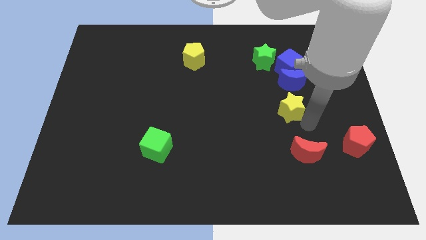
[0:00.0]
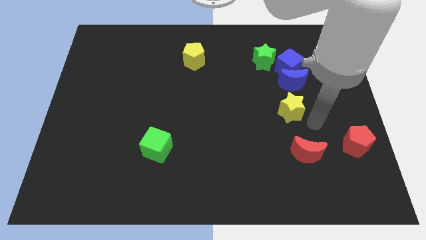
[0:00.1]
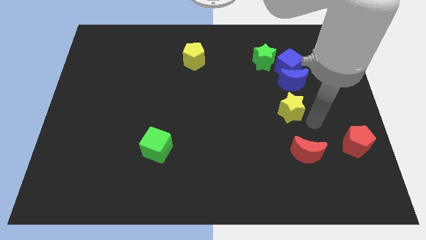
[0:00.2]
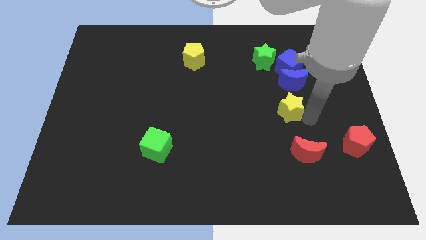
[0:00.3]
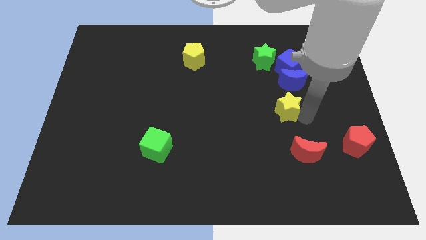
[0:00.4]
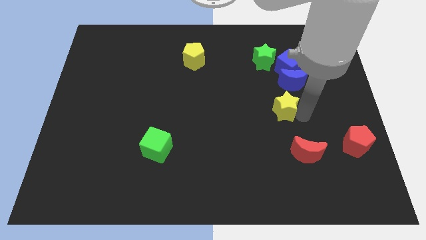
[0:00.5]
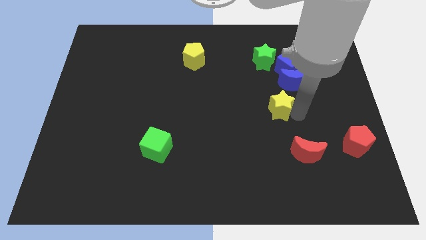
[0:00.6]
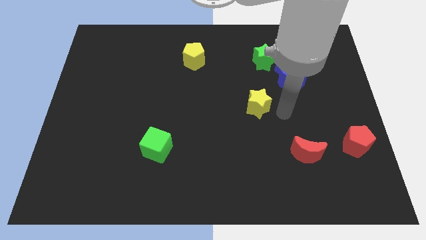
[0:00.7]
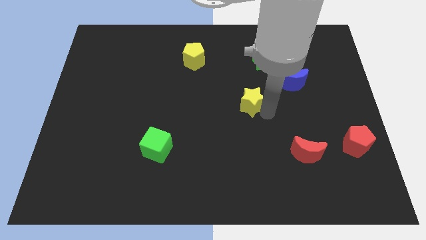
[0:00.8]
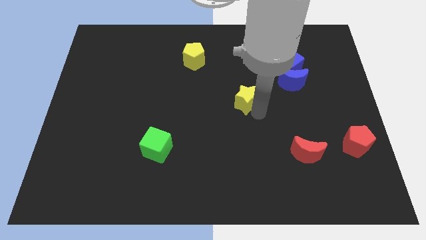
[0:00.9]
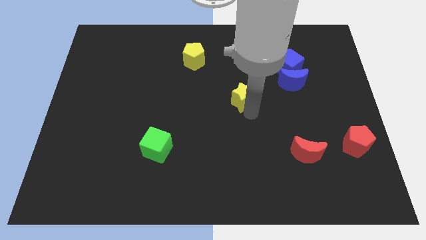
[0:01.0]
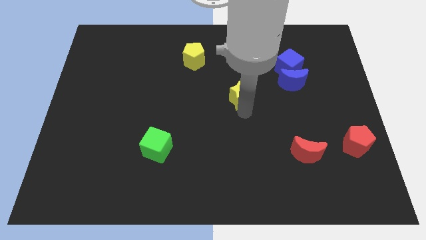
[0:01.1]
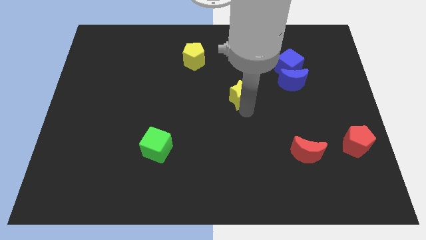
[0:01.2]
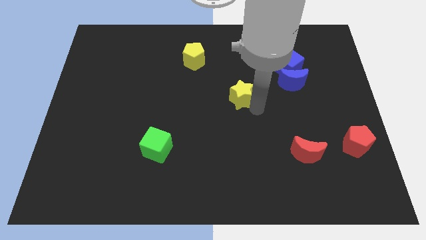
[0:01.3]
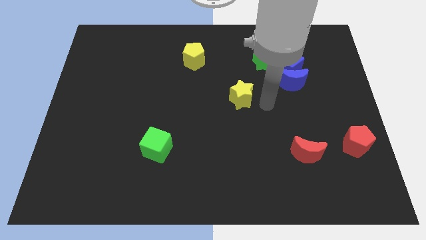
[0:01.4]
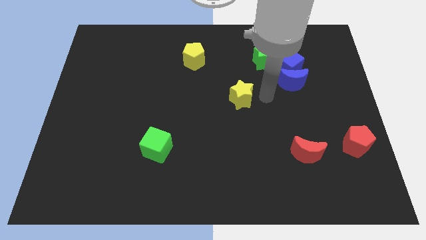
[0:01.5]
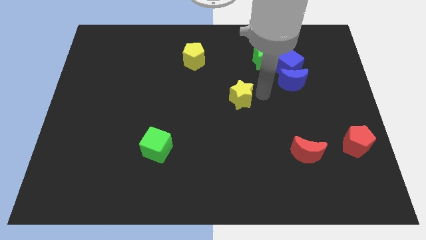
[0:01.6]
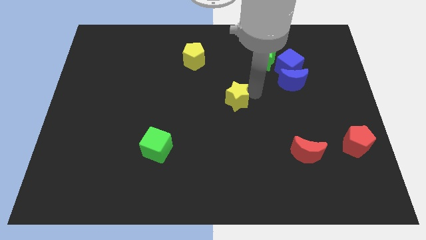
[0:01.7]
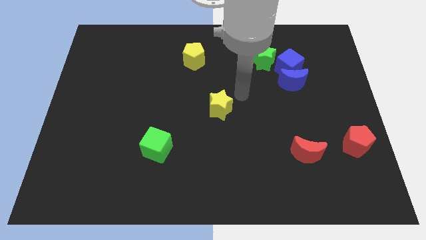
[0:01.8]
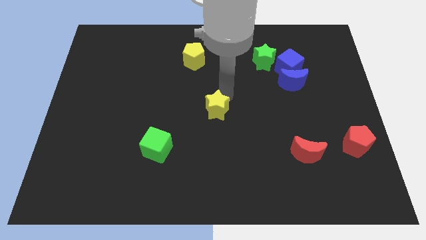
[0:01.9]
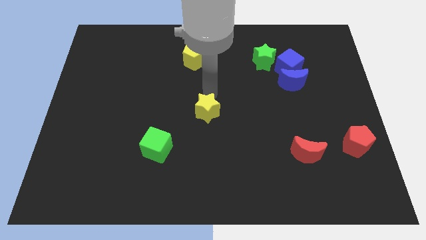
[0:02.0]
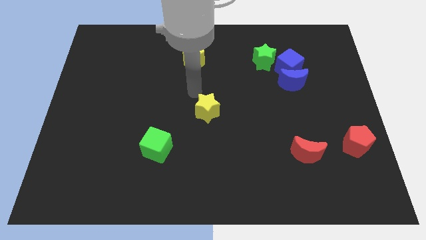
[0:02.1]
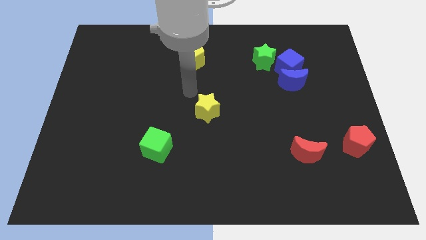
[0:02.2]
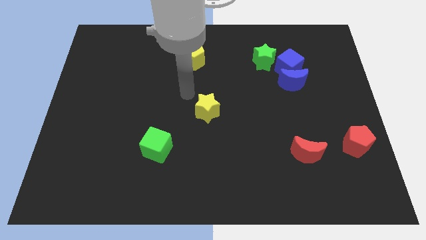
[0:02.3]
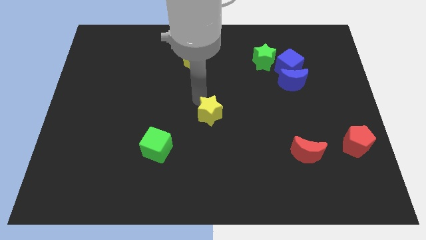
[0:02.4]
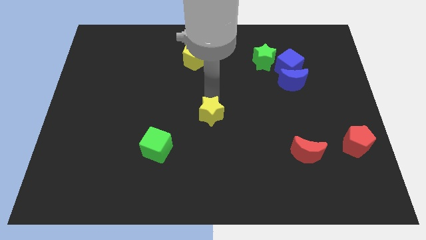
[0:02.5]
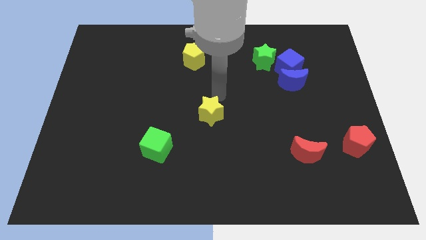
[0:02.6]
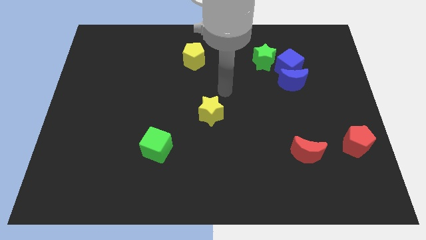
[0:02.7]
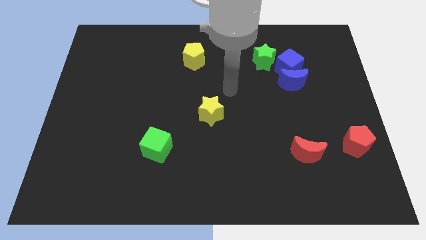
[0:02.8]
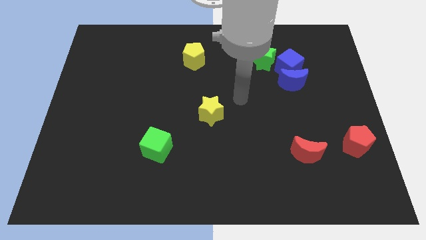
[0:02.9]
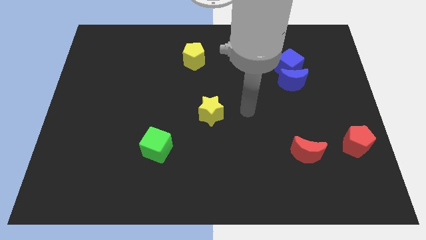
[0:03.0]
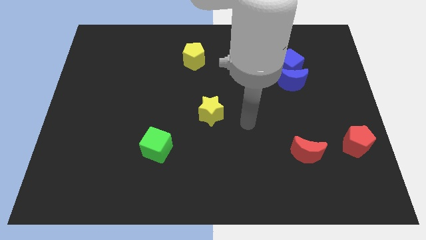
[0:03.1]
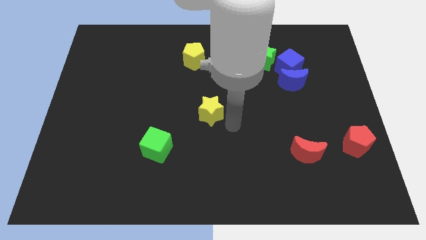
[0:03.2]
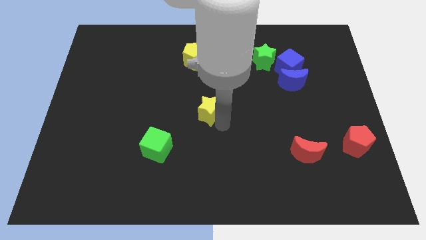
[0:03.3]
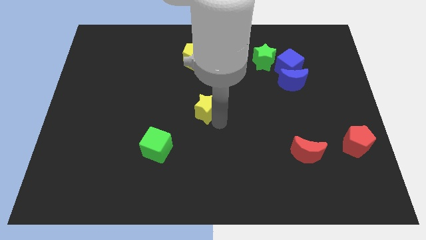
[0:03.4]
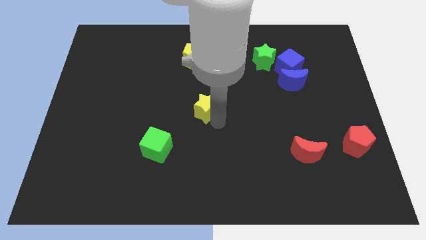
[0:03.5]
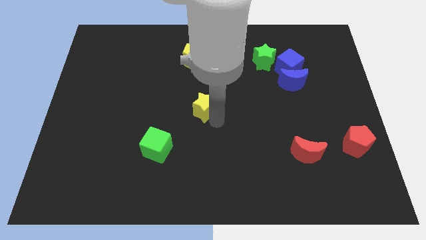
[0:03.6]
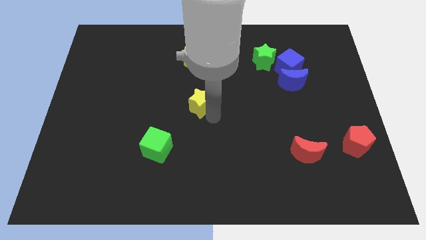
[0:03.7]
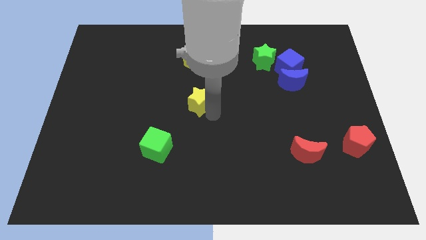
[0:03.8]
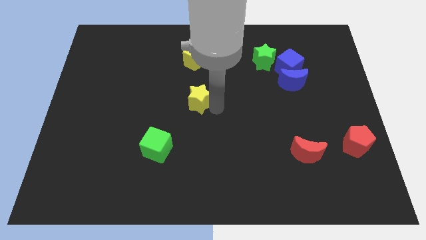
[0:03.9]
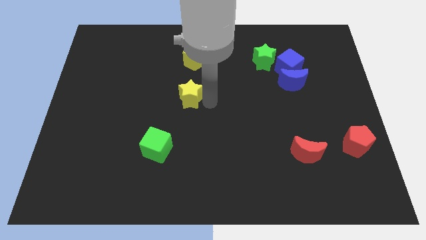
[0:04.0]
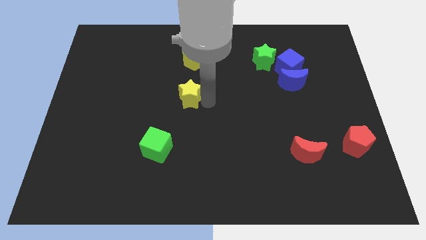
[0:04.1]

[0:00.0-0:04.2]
move the yellow star to the center of the board

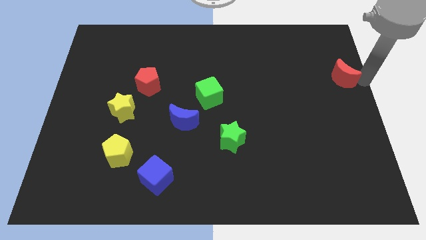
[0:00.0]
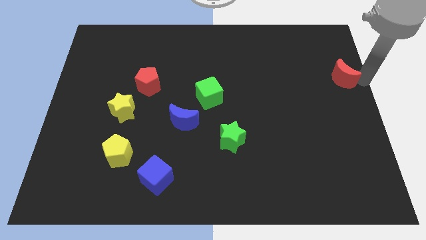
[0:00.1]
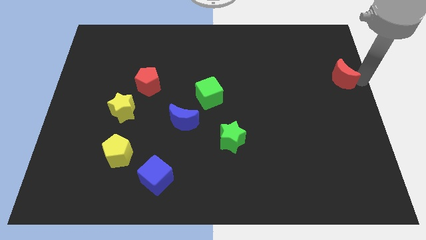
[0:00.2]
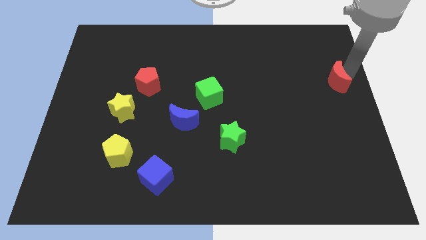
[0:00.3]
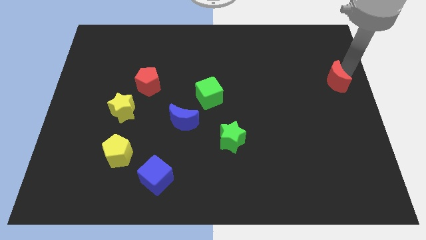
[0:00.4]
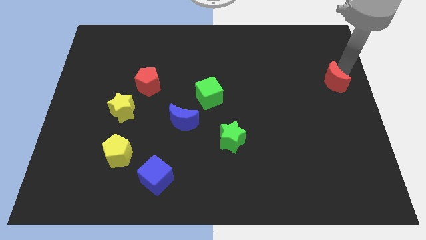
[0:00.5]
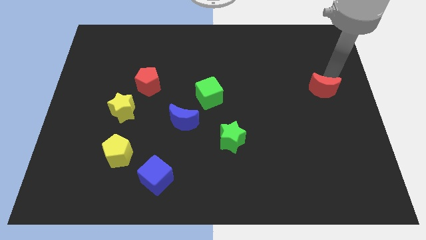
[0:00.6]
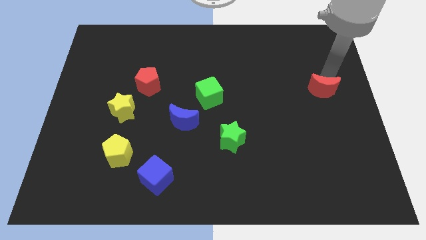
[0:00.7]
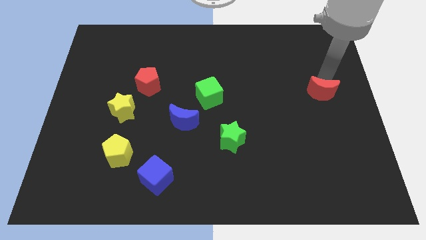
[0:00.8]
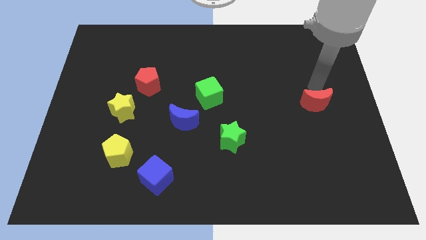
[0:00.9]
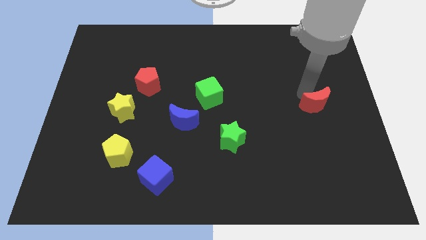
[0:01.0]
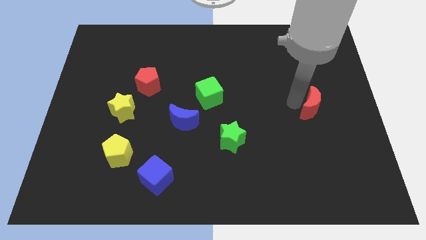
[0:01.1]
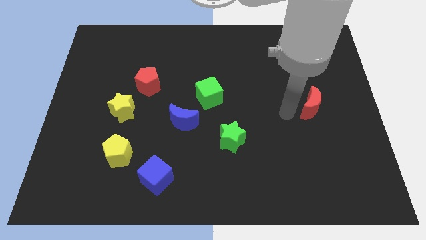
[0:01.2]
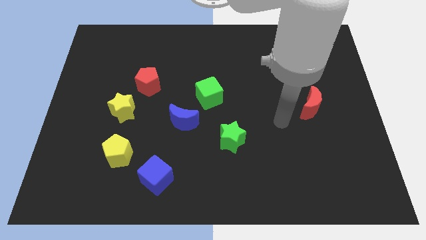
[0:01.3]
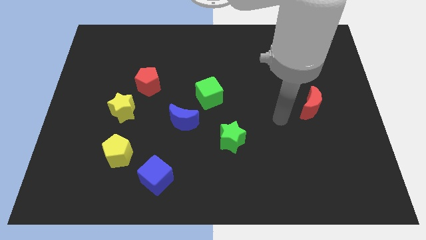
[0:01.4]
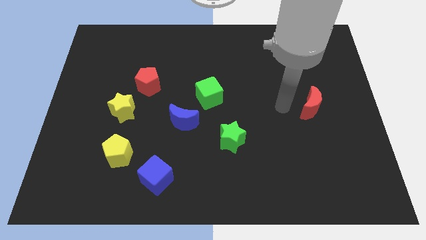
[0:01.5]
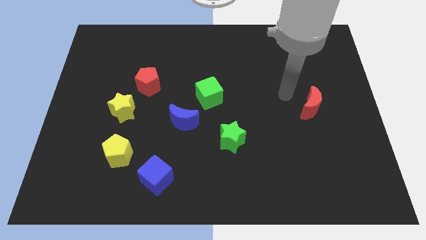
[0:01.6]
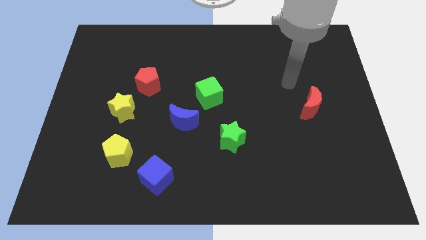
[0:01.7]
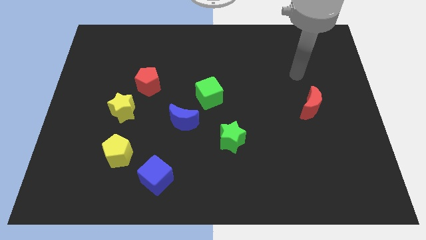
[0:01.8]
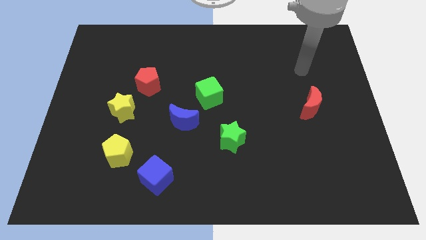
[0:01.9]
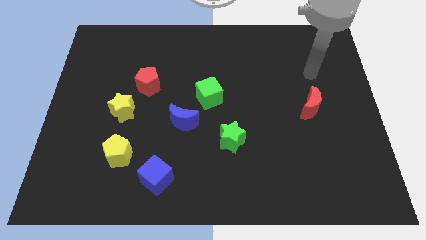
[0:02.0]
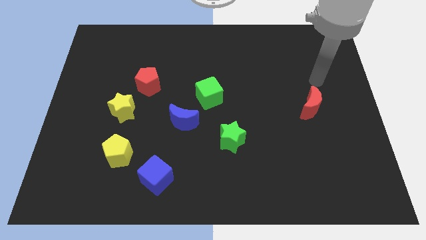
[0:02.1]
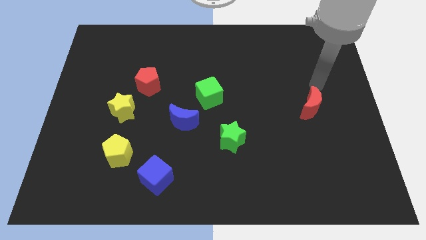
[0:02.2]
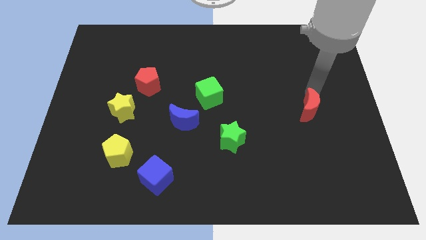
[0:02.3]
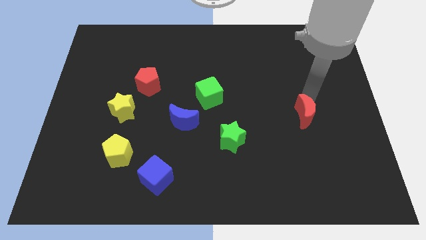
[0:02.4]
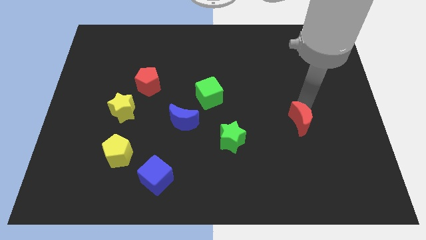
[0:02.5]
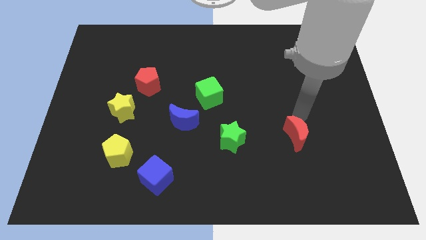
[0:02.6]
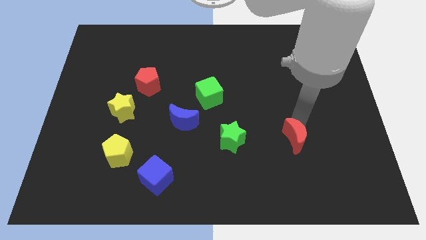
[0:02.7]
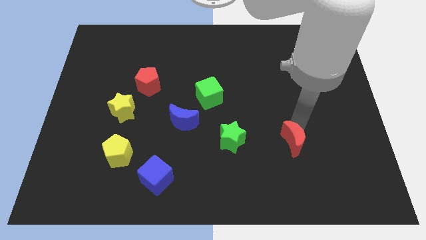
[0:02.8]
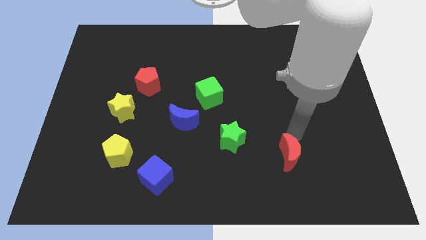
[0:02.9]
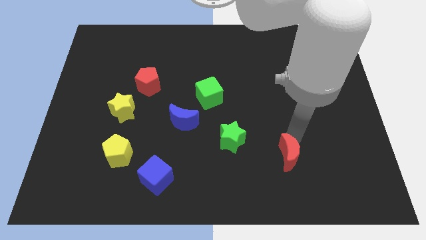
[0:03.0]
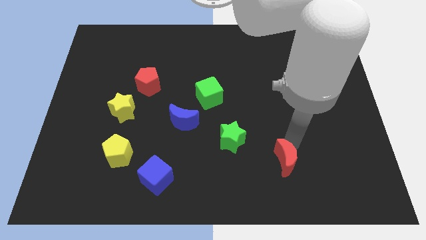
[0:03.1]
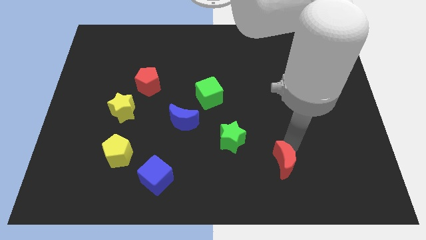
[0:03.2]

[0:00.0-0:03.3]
move red crescent towards green star

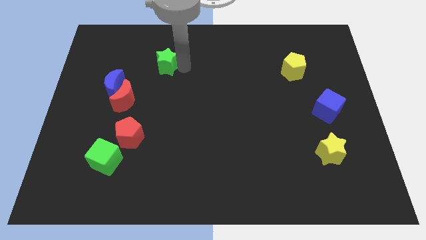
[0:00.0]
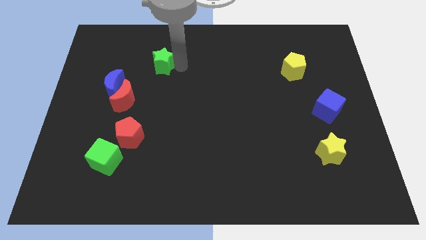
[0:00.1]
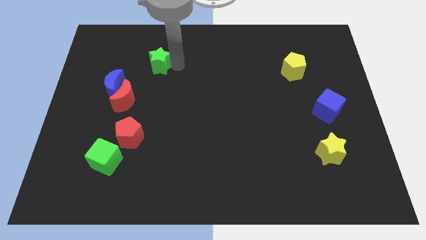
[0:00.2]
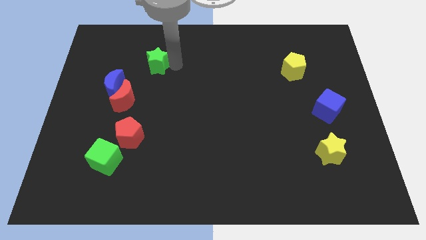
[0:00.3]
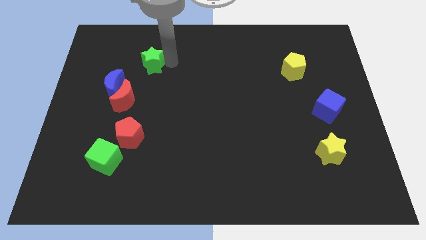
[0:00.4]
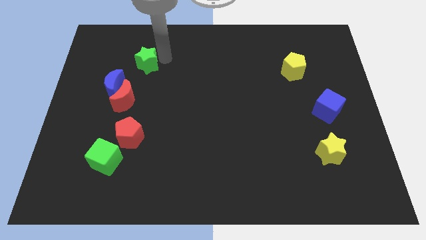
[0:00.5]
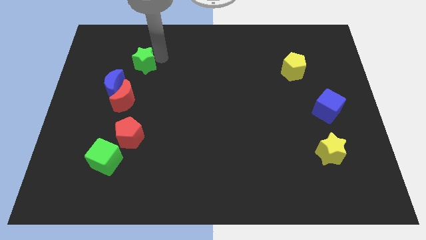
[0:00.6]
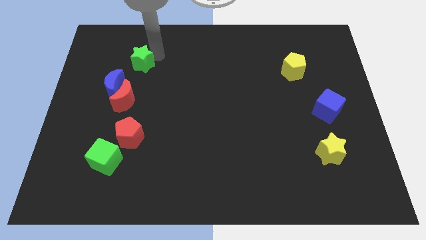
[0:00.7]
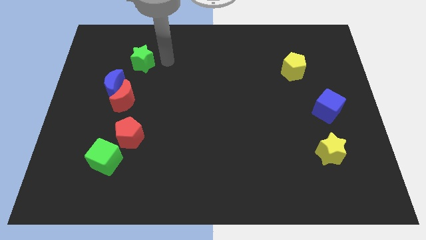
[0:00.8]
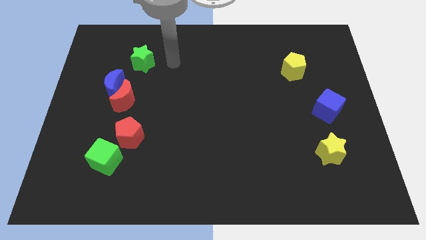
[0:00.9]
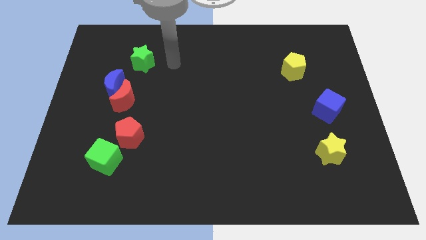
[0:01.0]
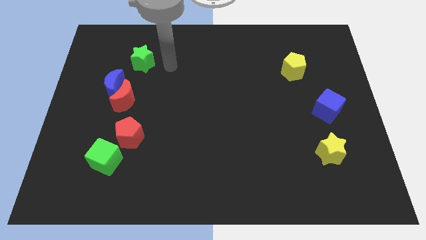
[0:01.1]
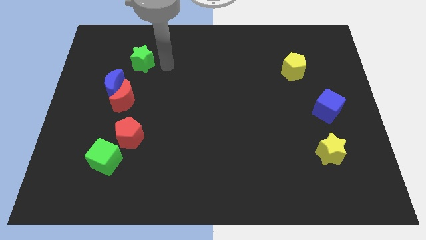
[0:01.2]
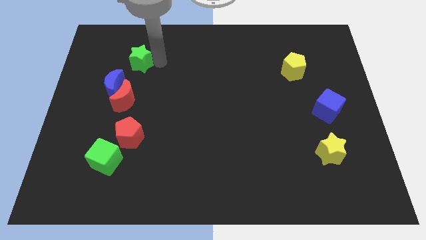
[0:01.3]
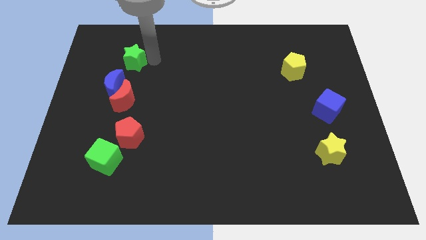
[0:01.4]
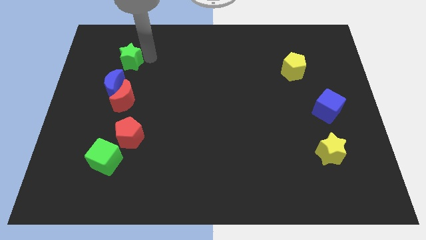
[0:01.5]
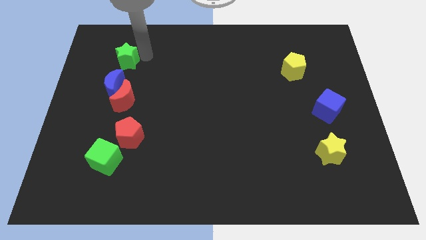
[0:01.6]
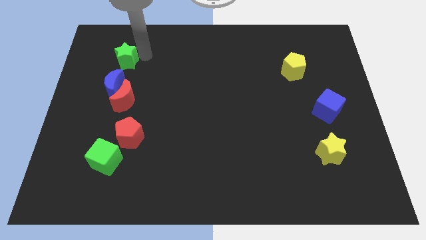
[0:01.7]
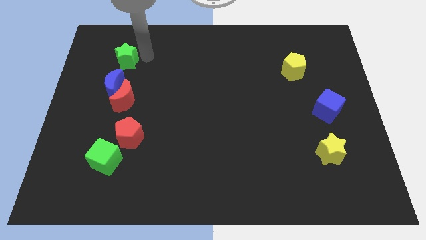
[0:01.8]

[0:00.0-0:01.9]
move the green star vertically above the blue moon
